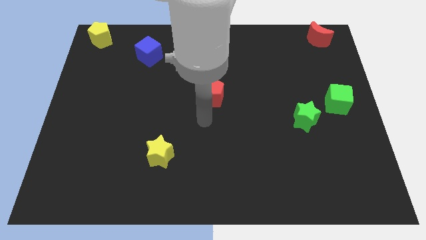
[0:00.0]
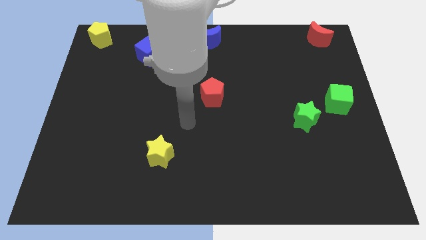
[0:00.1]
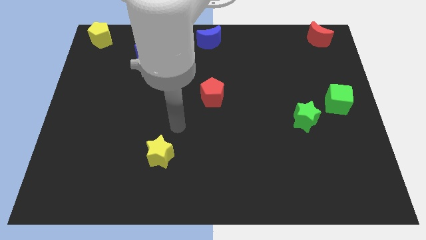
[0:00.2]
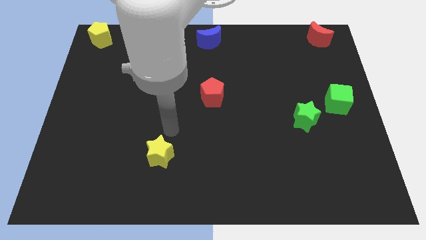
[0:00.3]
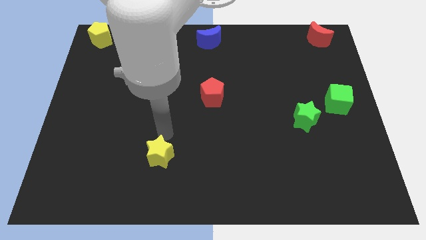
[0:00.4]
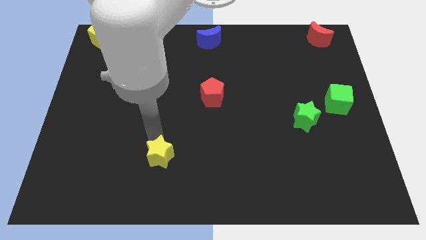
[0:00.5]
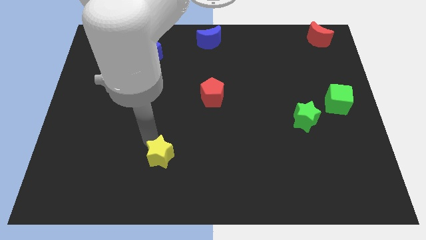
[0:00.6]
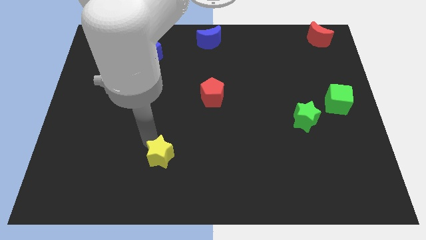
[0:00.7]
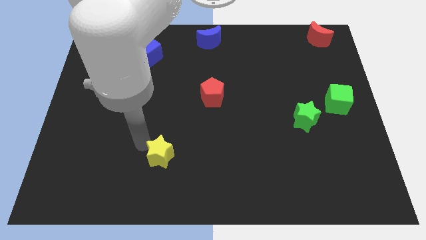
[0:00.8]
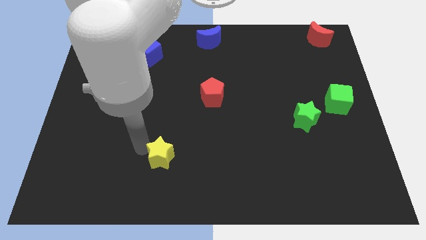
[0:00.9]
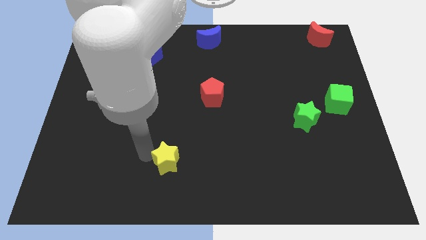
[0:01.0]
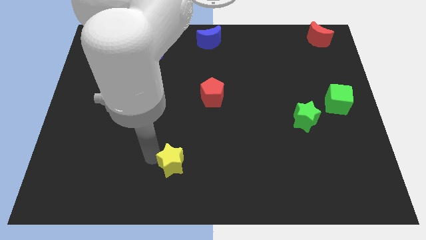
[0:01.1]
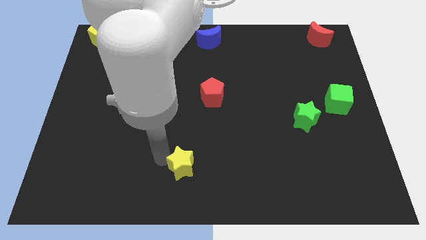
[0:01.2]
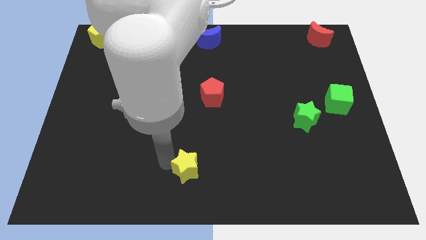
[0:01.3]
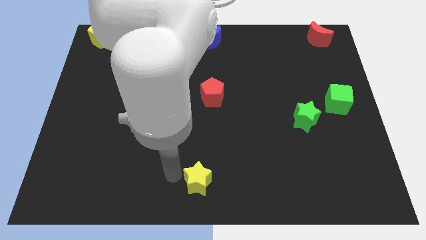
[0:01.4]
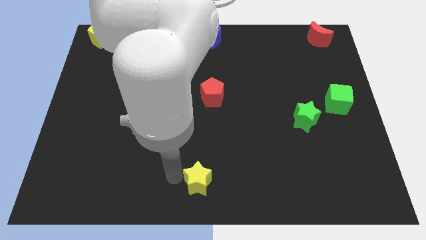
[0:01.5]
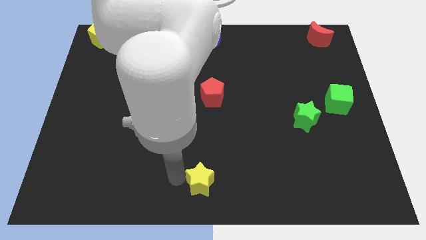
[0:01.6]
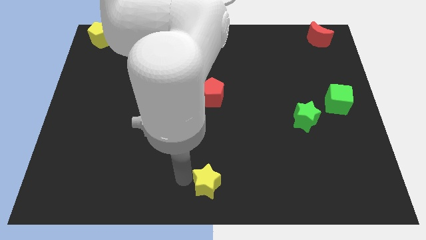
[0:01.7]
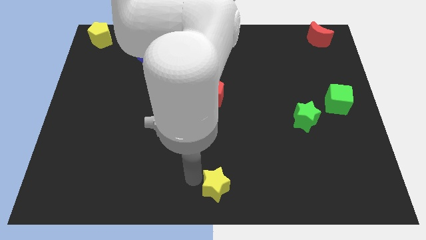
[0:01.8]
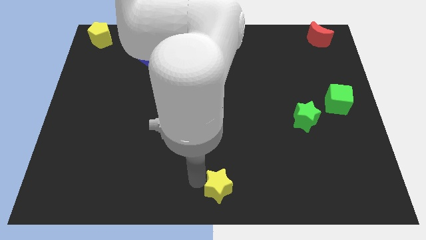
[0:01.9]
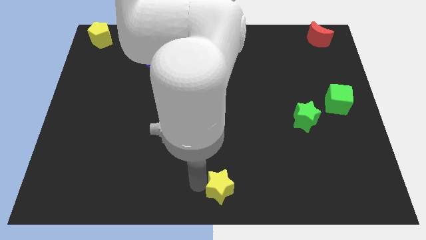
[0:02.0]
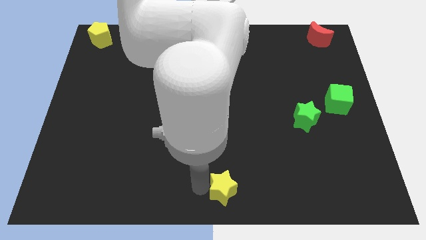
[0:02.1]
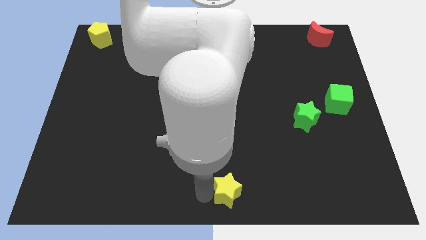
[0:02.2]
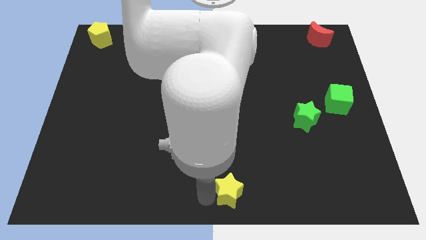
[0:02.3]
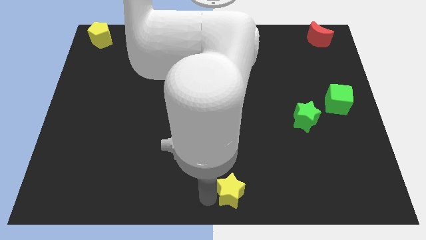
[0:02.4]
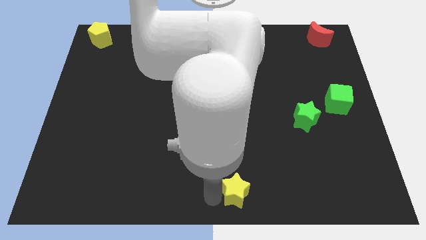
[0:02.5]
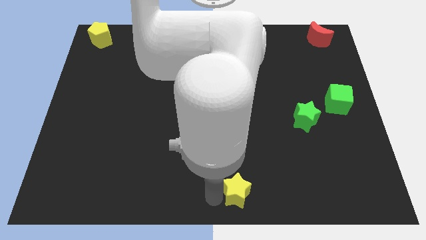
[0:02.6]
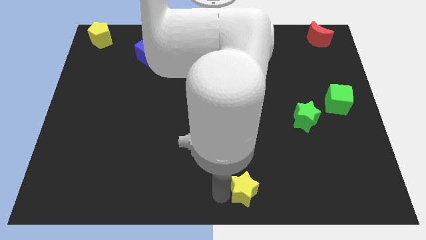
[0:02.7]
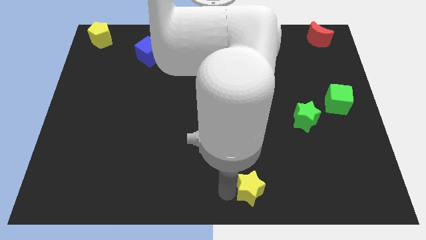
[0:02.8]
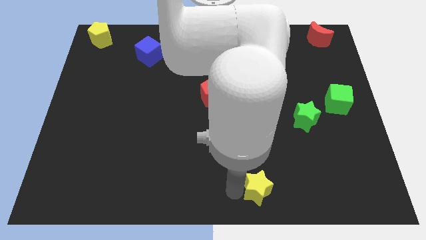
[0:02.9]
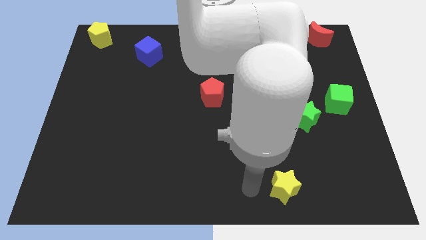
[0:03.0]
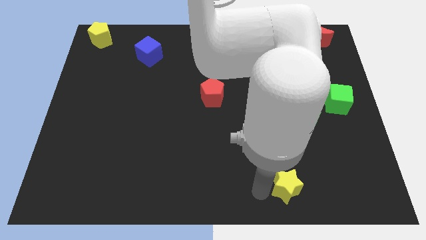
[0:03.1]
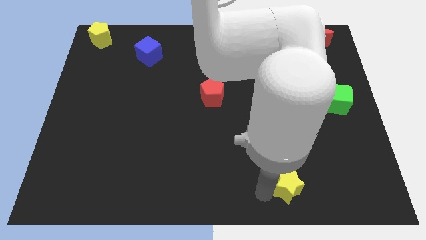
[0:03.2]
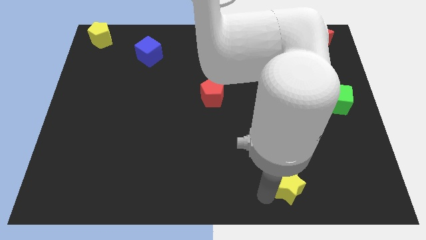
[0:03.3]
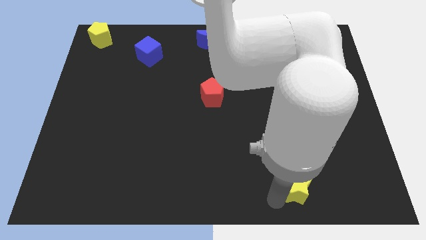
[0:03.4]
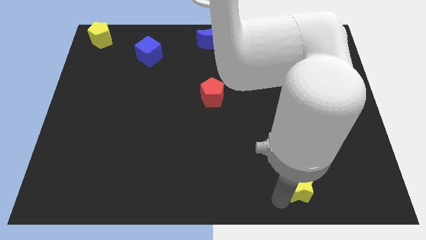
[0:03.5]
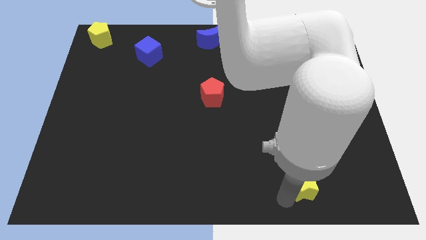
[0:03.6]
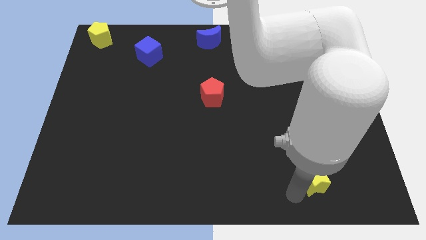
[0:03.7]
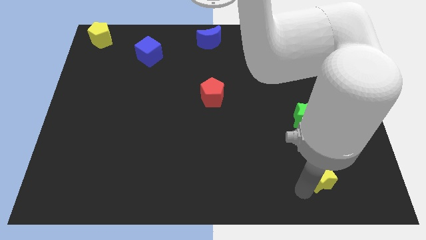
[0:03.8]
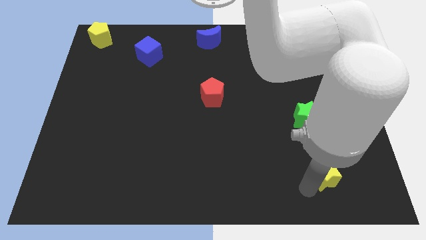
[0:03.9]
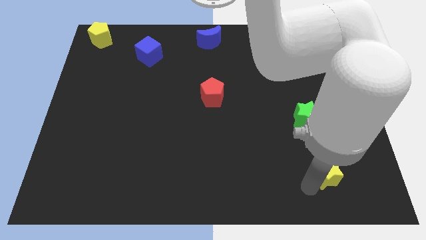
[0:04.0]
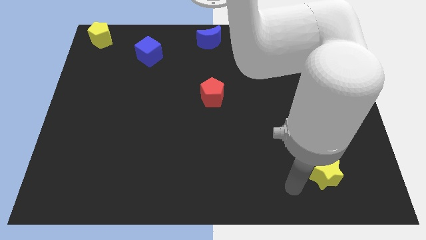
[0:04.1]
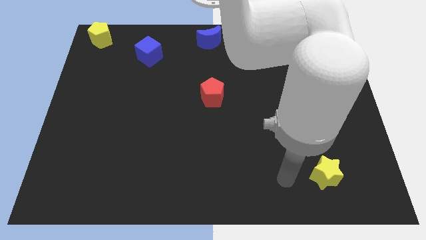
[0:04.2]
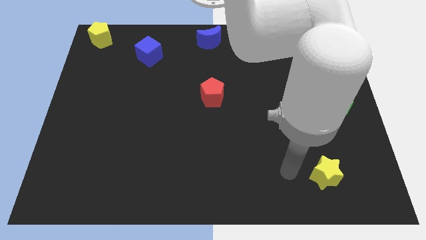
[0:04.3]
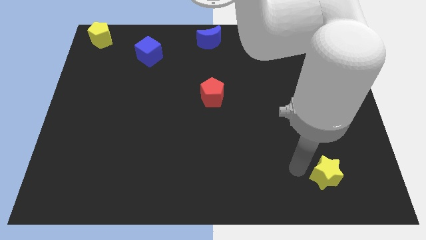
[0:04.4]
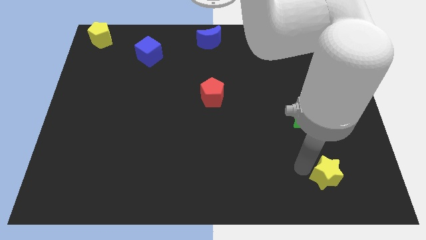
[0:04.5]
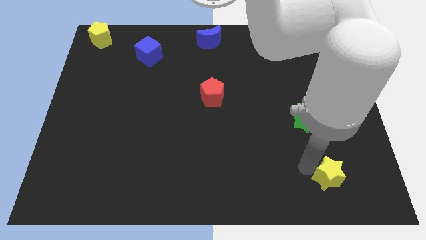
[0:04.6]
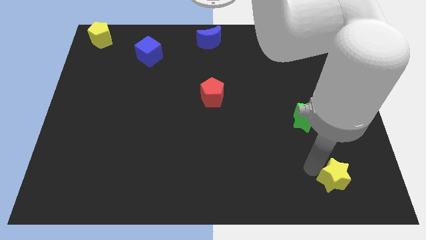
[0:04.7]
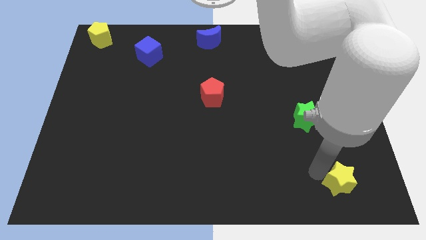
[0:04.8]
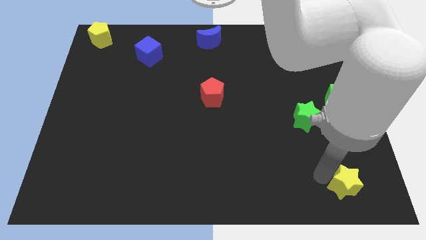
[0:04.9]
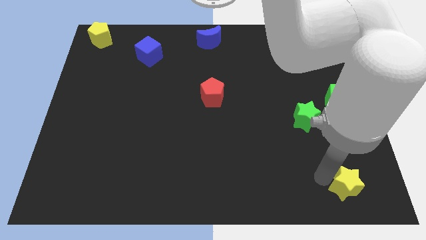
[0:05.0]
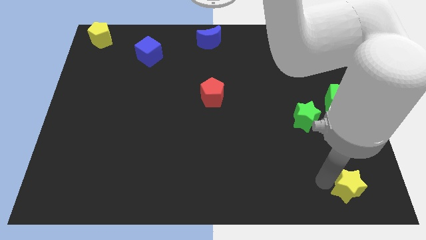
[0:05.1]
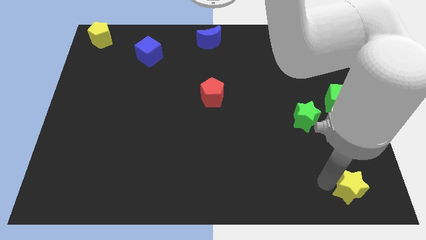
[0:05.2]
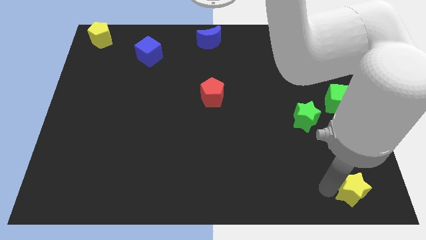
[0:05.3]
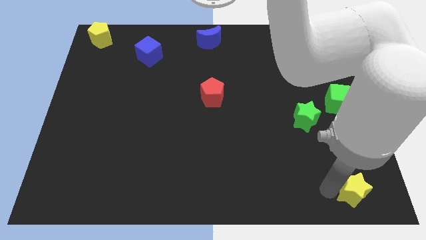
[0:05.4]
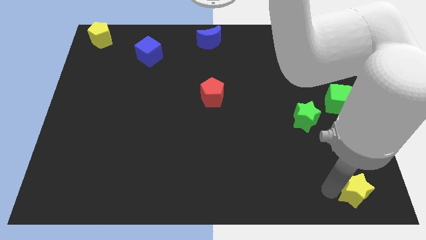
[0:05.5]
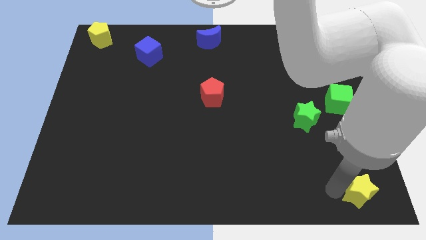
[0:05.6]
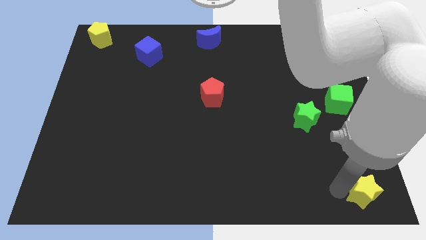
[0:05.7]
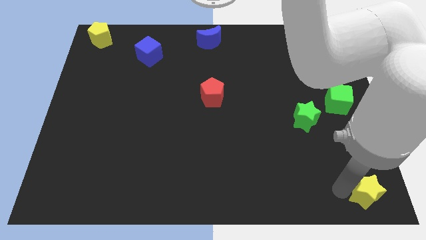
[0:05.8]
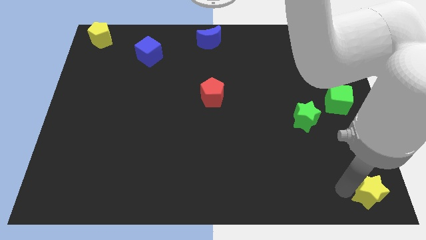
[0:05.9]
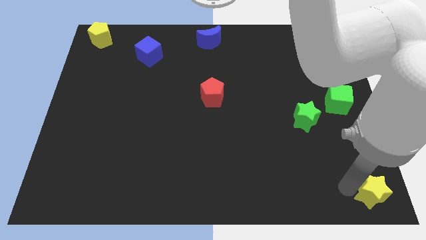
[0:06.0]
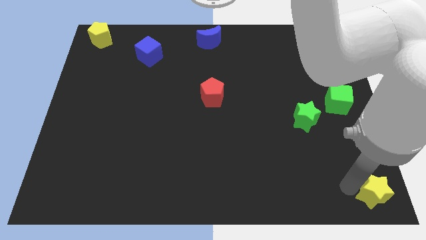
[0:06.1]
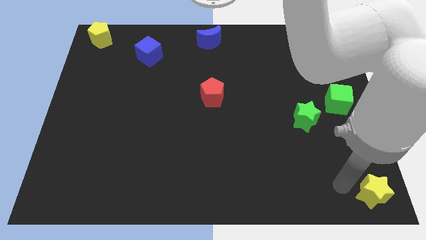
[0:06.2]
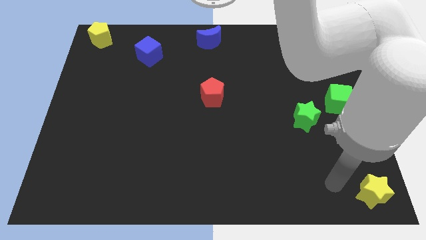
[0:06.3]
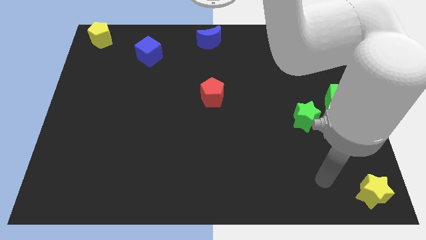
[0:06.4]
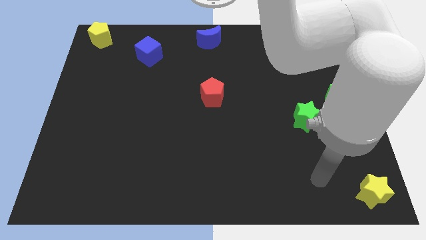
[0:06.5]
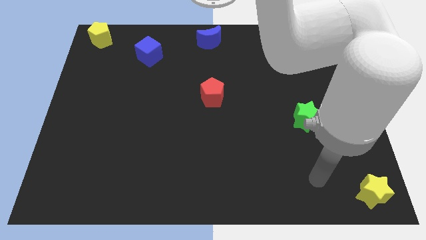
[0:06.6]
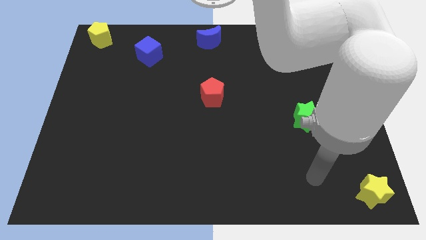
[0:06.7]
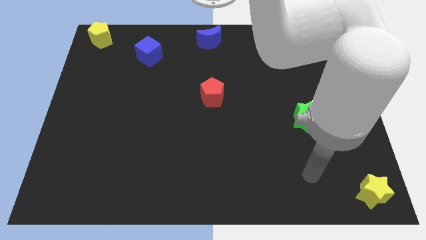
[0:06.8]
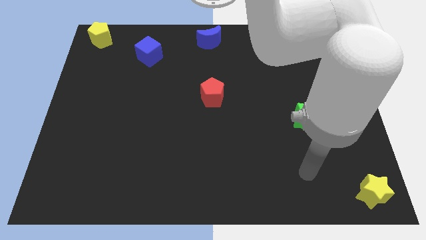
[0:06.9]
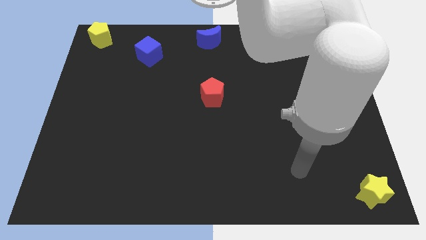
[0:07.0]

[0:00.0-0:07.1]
push the yellow star to the bottom right corner

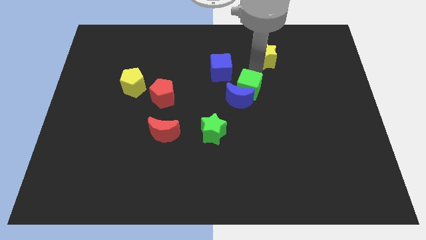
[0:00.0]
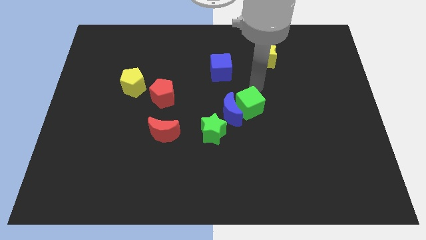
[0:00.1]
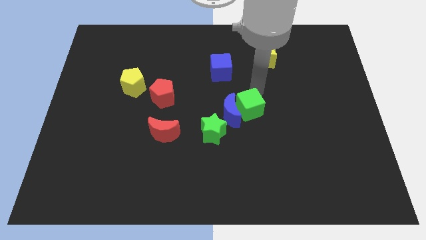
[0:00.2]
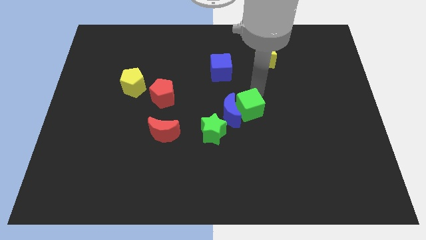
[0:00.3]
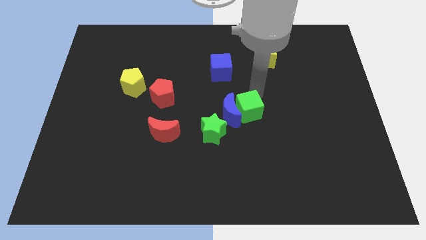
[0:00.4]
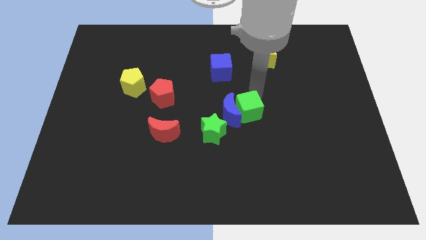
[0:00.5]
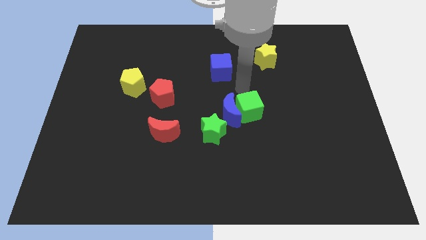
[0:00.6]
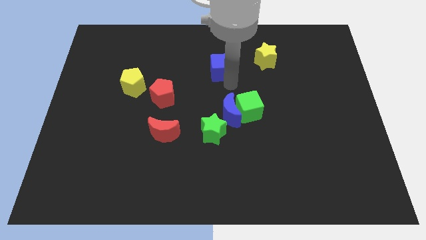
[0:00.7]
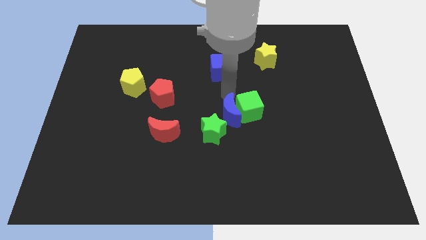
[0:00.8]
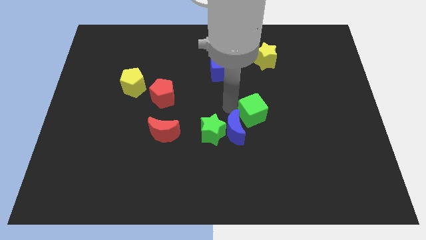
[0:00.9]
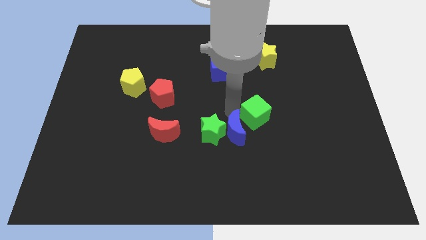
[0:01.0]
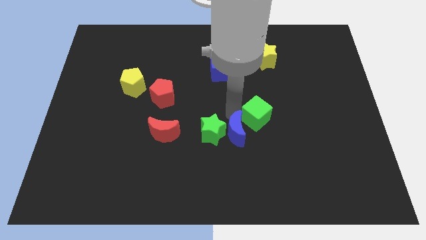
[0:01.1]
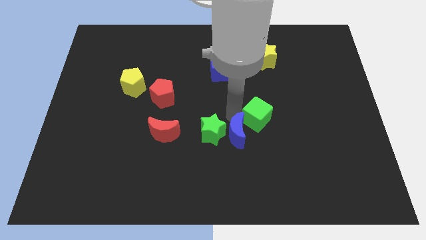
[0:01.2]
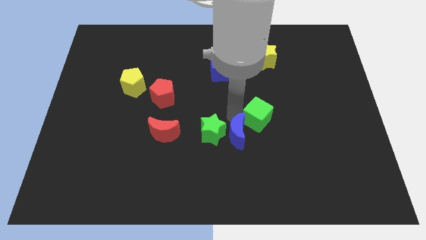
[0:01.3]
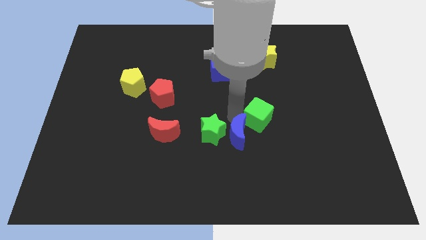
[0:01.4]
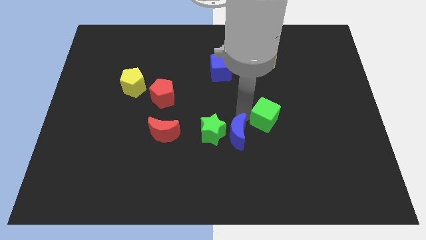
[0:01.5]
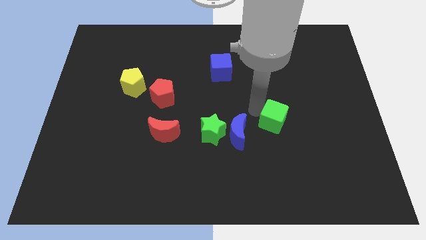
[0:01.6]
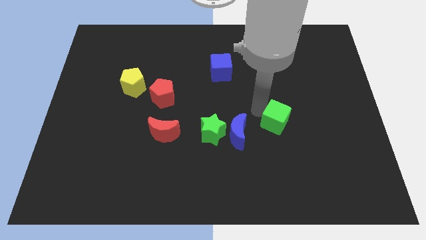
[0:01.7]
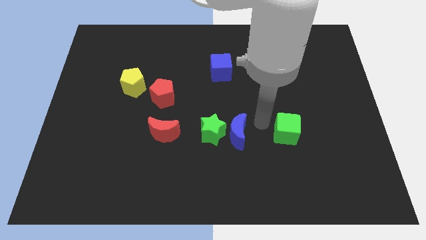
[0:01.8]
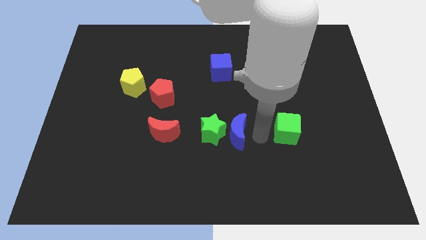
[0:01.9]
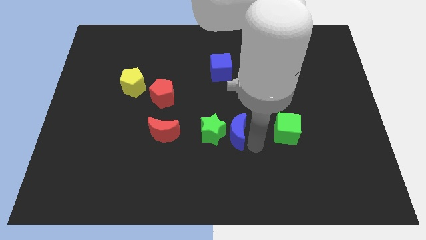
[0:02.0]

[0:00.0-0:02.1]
line up the green star blue moon green cube and red moon
